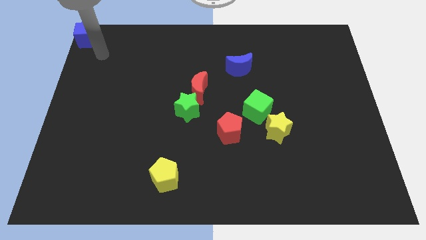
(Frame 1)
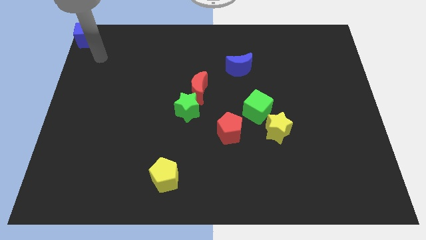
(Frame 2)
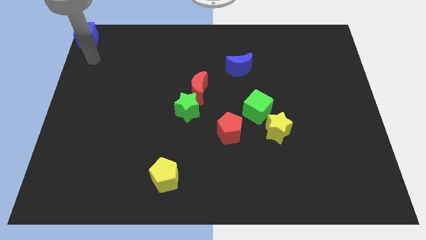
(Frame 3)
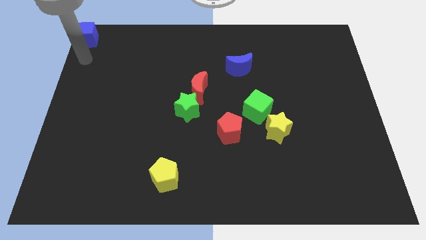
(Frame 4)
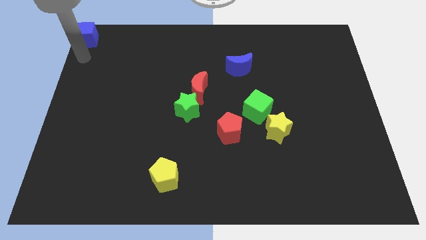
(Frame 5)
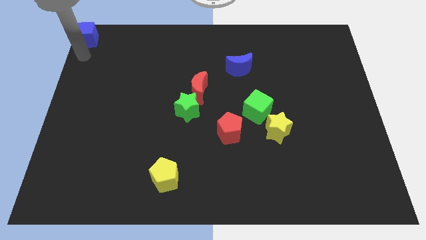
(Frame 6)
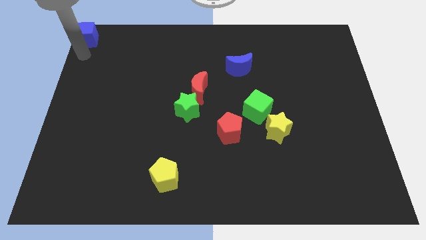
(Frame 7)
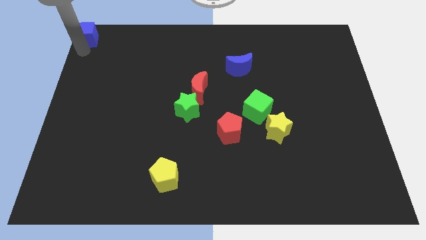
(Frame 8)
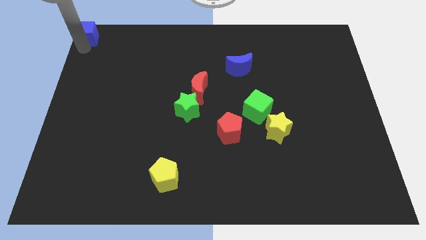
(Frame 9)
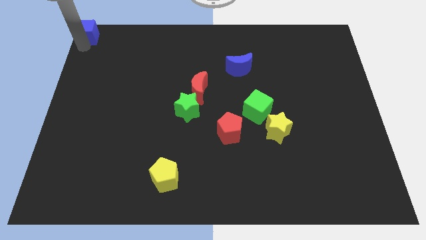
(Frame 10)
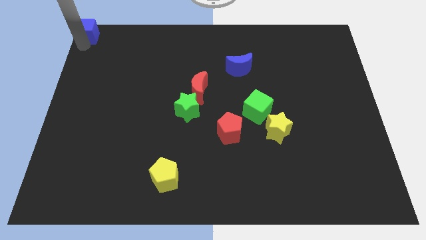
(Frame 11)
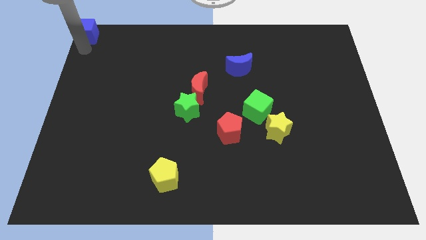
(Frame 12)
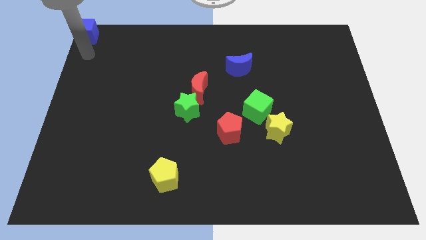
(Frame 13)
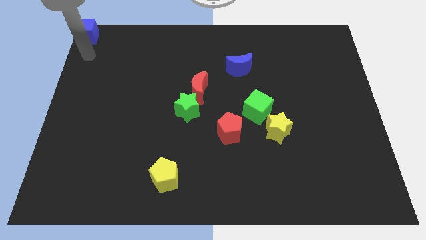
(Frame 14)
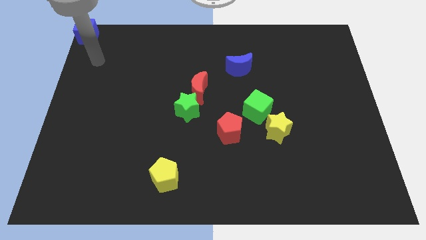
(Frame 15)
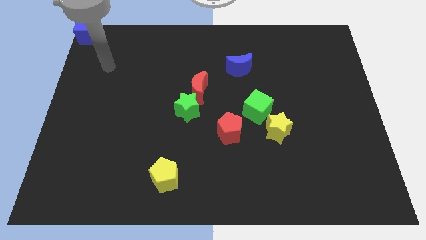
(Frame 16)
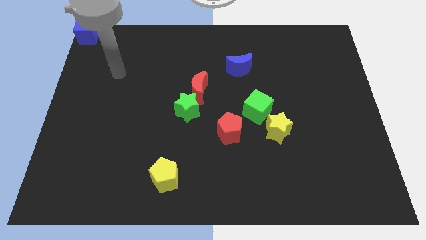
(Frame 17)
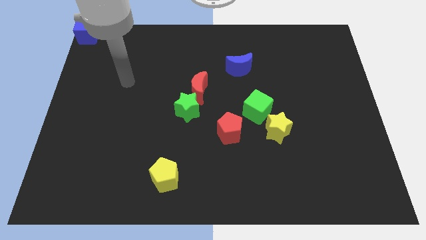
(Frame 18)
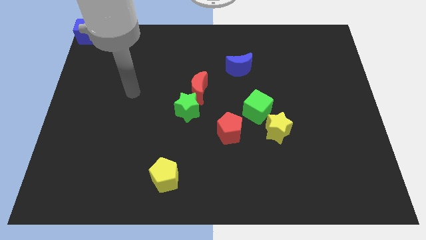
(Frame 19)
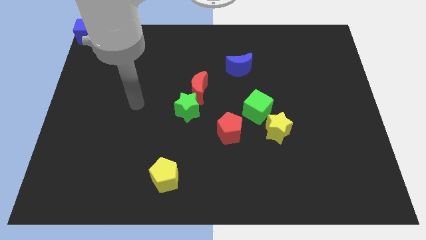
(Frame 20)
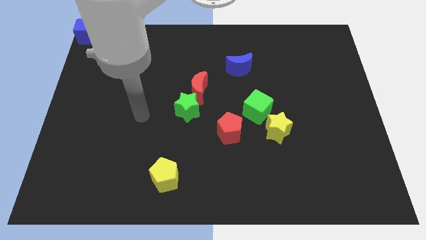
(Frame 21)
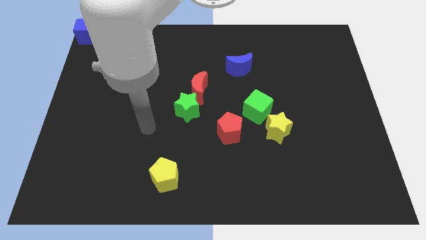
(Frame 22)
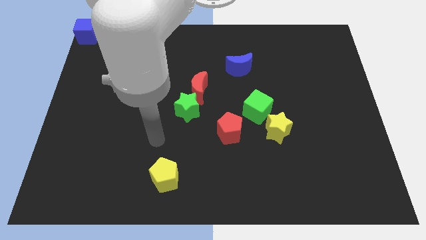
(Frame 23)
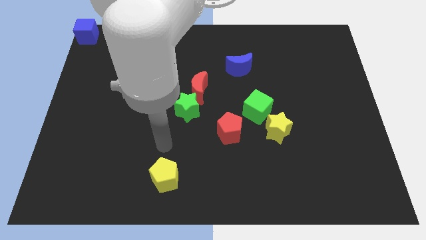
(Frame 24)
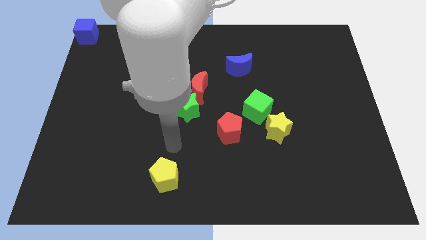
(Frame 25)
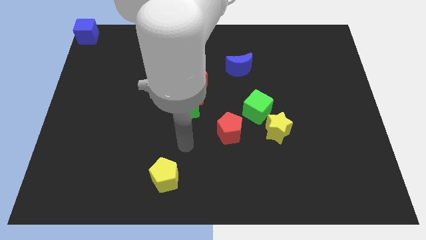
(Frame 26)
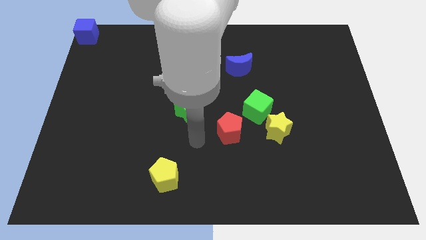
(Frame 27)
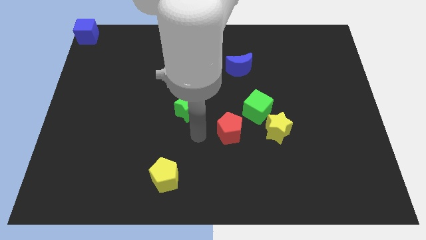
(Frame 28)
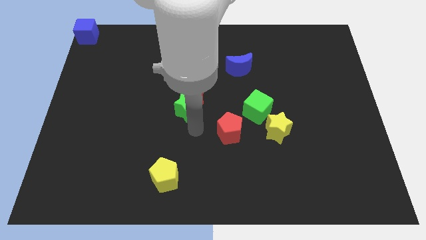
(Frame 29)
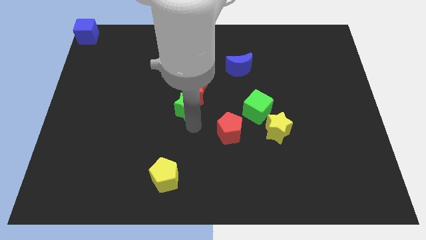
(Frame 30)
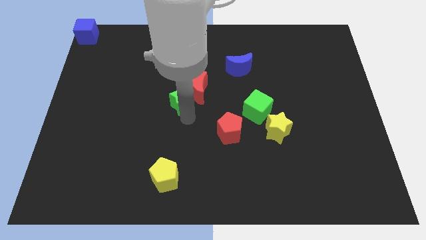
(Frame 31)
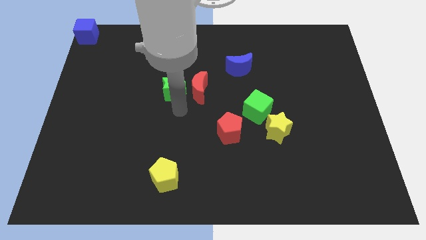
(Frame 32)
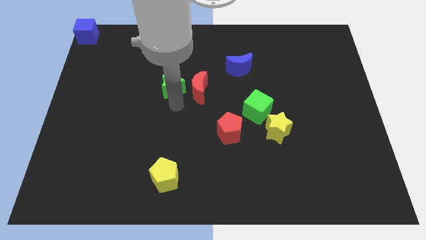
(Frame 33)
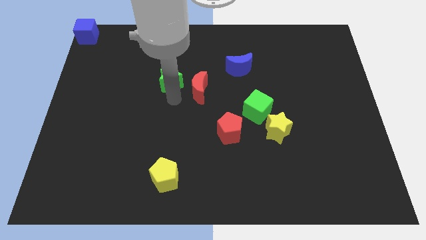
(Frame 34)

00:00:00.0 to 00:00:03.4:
move the green star to the left of the red crescent

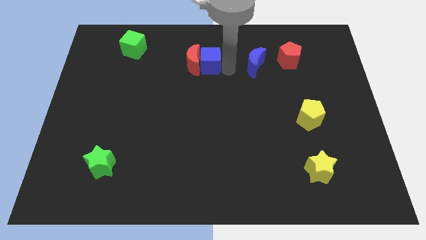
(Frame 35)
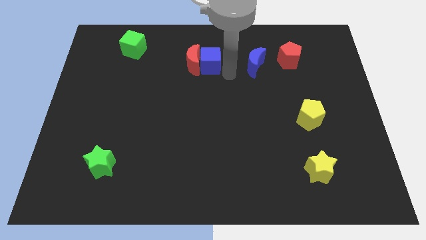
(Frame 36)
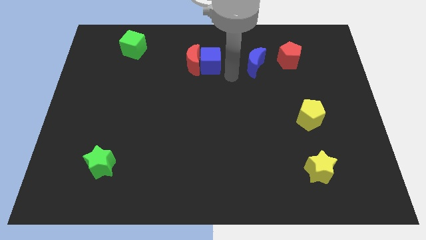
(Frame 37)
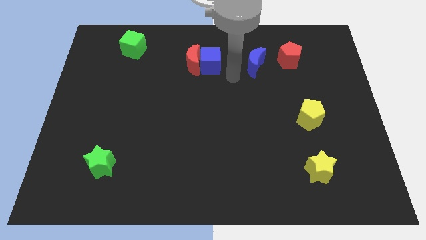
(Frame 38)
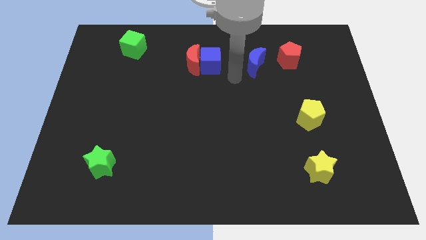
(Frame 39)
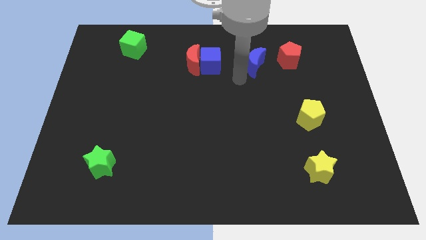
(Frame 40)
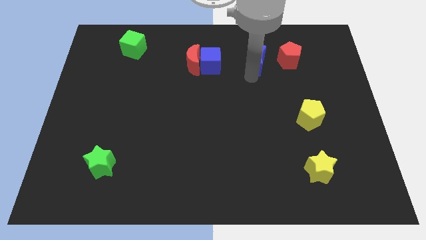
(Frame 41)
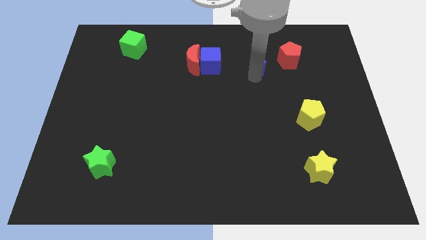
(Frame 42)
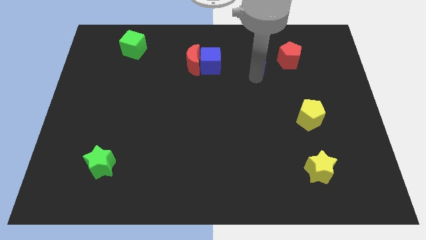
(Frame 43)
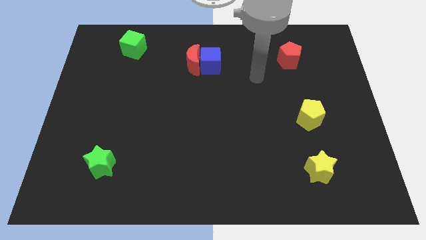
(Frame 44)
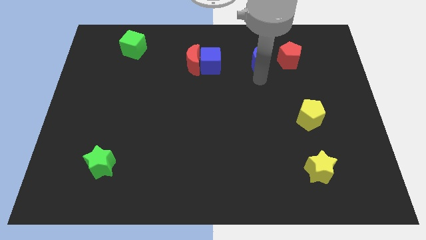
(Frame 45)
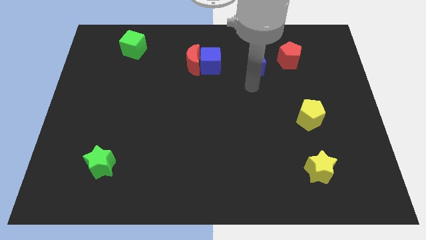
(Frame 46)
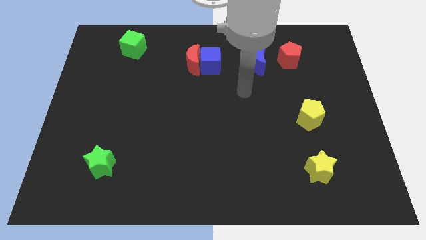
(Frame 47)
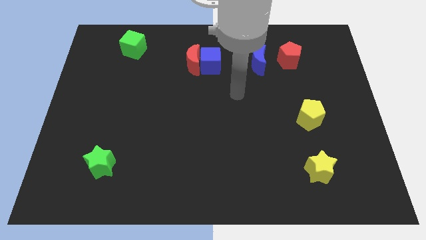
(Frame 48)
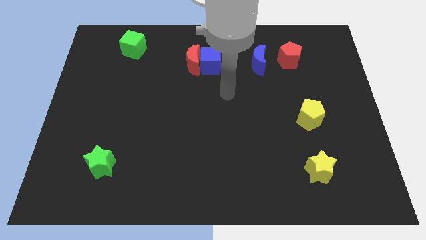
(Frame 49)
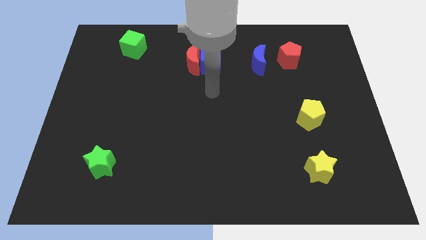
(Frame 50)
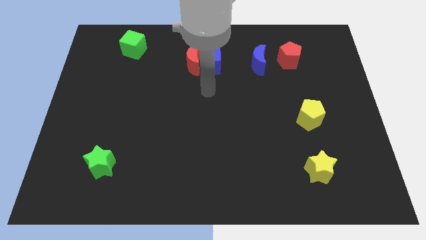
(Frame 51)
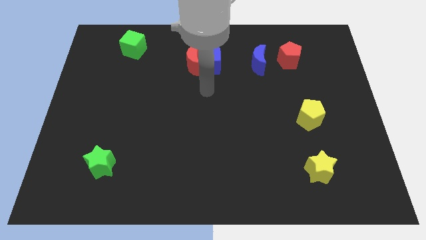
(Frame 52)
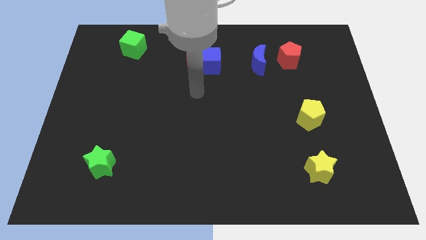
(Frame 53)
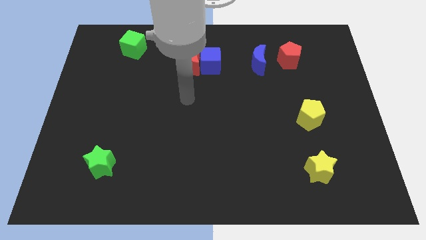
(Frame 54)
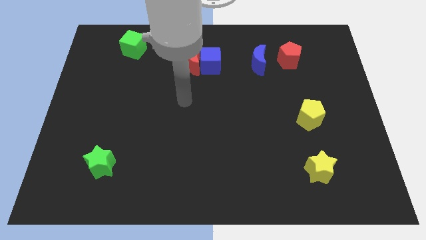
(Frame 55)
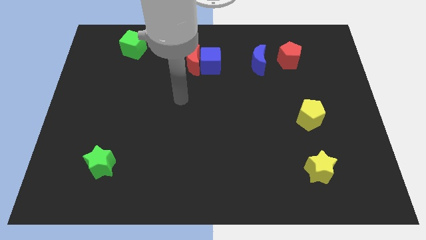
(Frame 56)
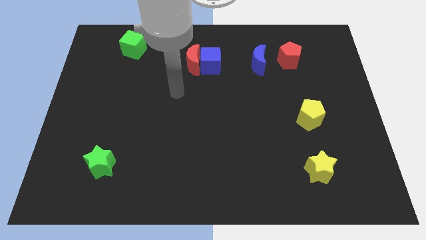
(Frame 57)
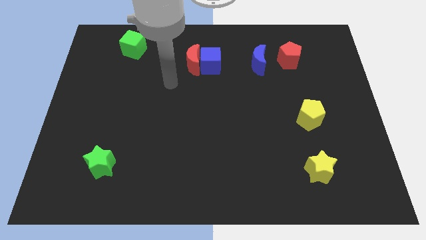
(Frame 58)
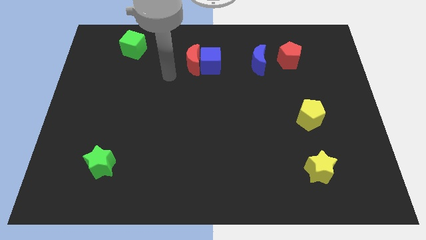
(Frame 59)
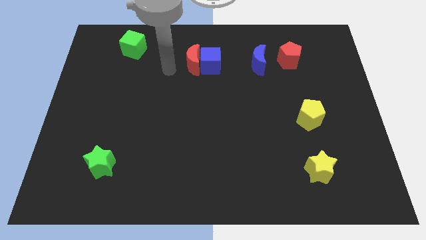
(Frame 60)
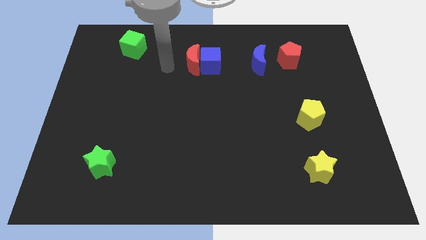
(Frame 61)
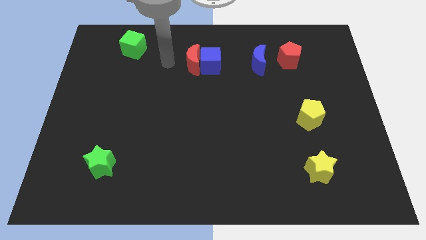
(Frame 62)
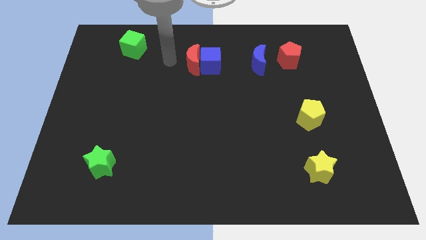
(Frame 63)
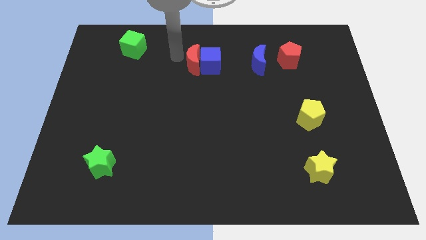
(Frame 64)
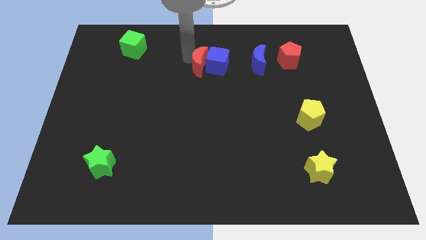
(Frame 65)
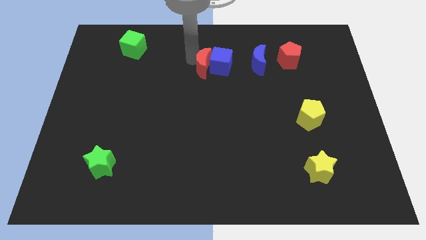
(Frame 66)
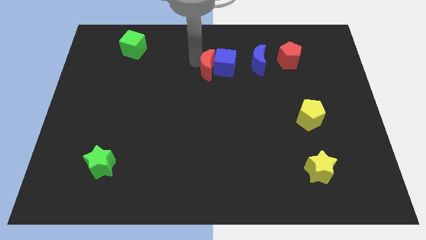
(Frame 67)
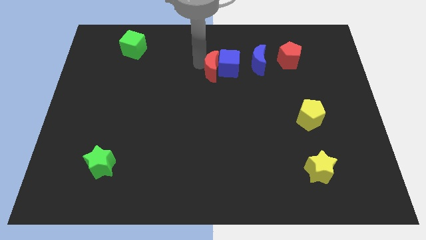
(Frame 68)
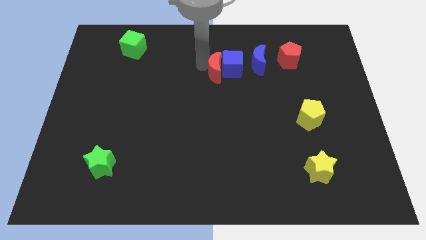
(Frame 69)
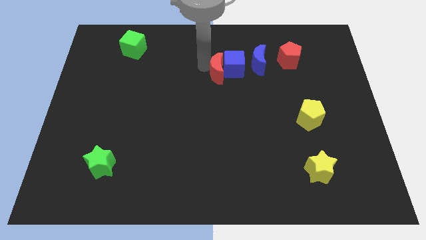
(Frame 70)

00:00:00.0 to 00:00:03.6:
line up the blue moon red moon and blue cube diagonally at the left side of the red pentagon

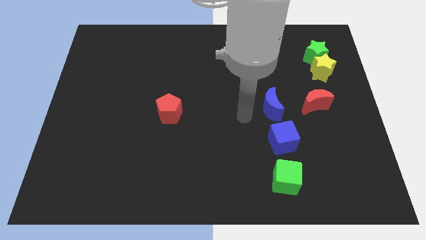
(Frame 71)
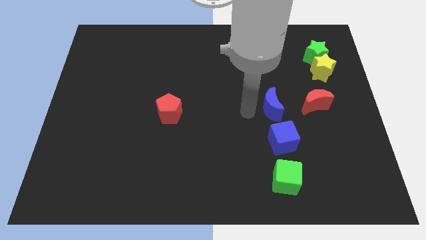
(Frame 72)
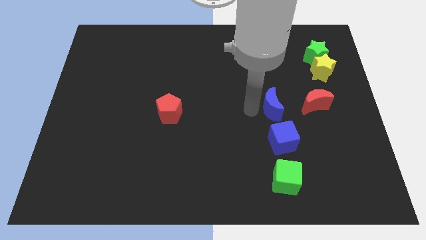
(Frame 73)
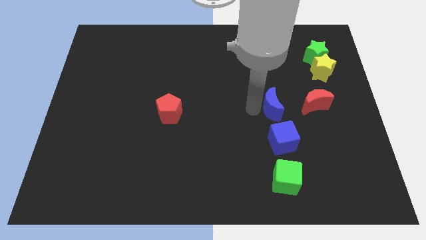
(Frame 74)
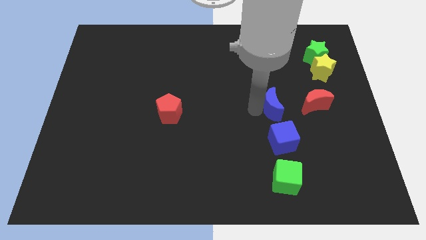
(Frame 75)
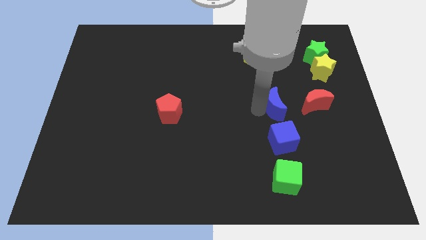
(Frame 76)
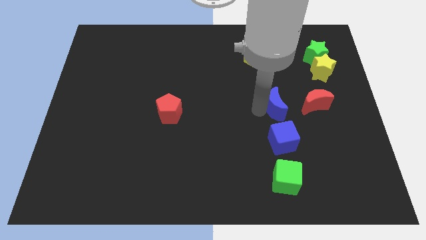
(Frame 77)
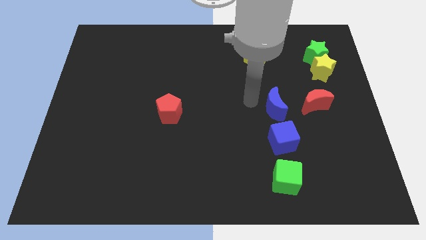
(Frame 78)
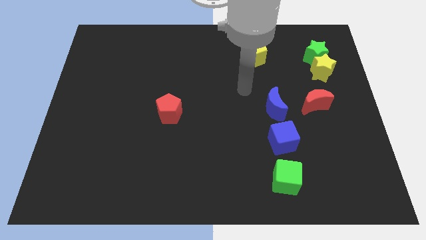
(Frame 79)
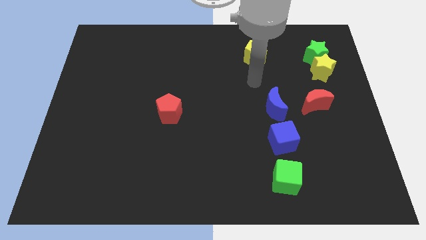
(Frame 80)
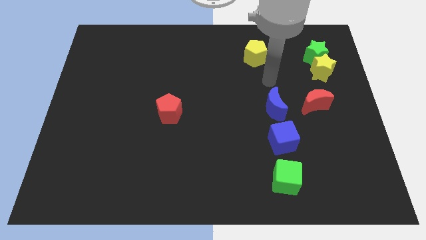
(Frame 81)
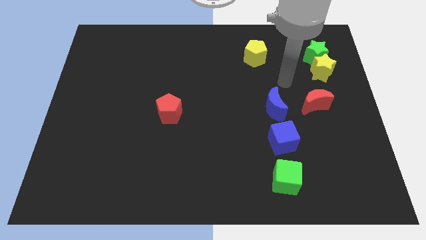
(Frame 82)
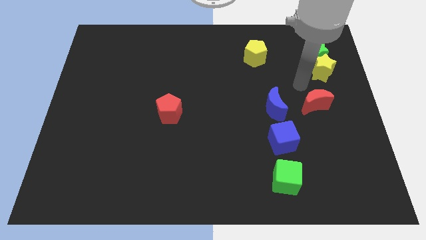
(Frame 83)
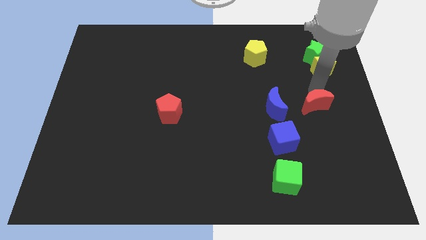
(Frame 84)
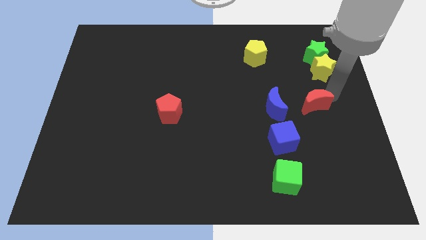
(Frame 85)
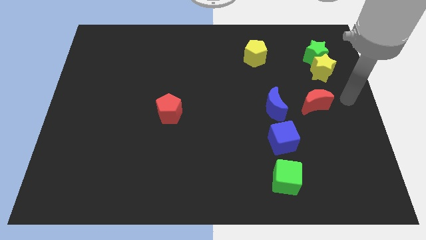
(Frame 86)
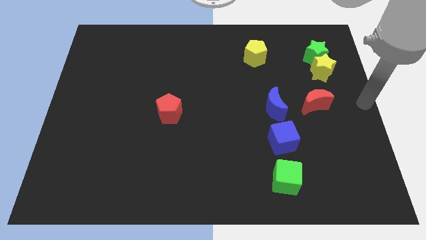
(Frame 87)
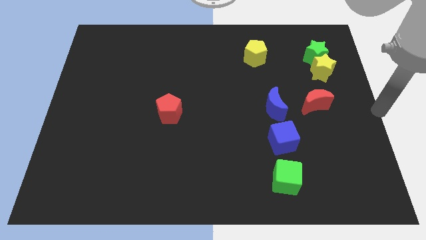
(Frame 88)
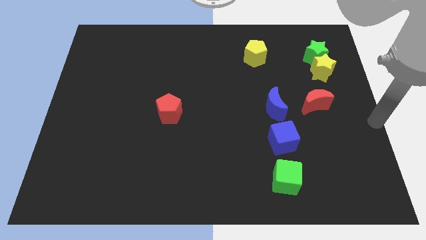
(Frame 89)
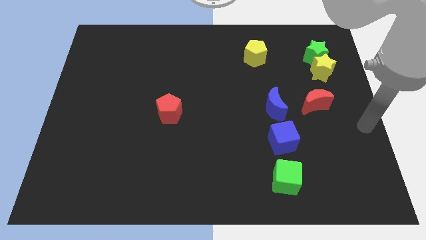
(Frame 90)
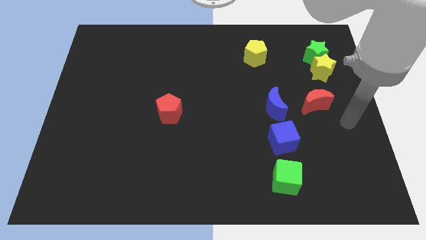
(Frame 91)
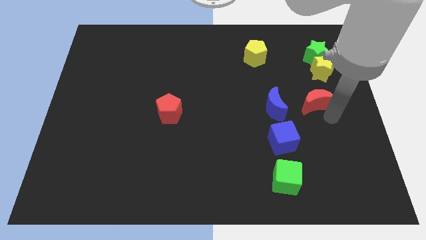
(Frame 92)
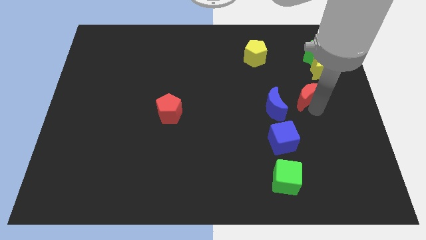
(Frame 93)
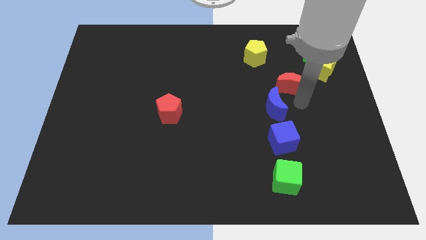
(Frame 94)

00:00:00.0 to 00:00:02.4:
move red crescent slight towards the blue crescent
